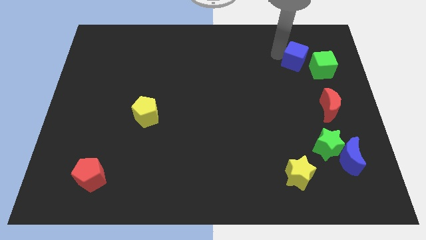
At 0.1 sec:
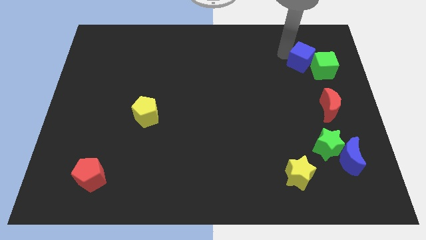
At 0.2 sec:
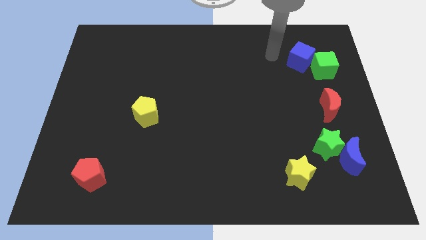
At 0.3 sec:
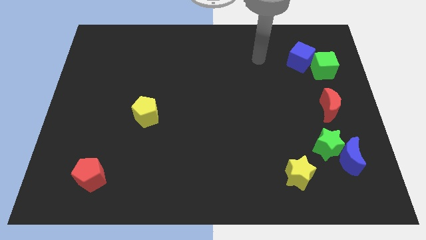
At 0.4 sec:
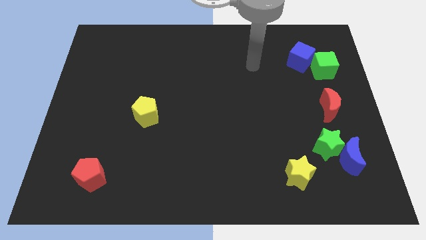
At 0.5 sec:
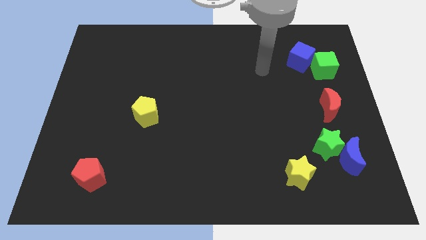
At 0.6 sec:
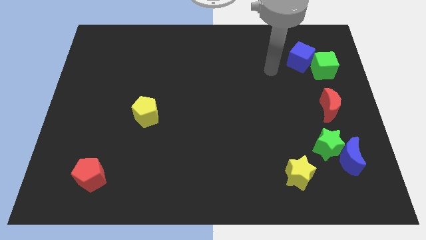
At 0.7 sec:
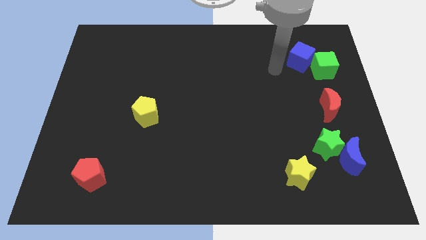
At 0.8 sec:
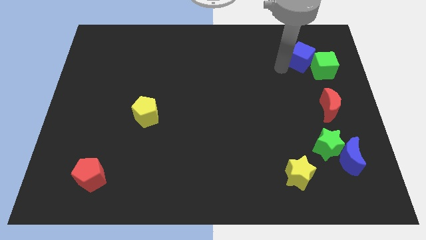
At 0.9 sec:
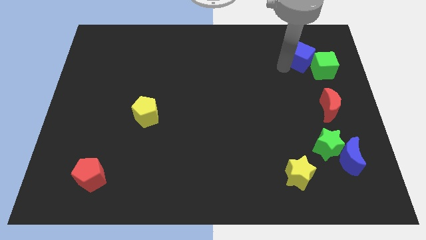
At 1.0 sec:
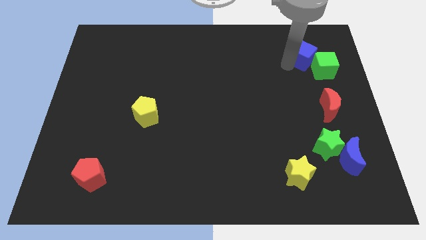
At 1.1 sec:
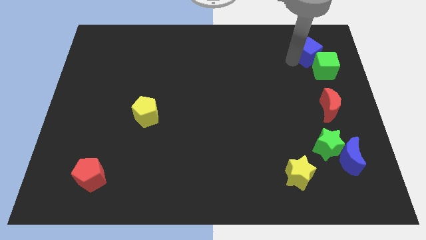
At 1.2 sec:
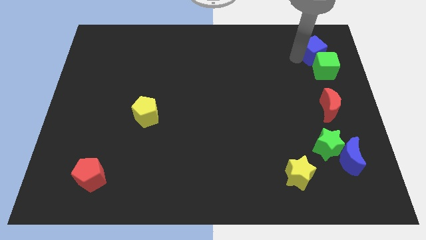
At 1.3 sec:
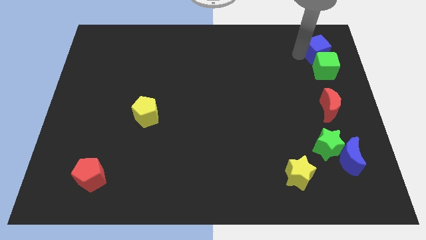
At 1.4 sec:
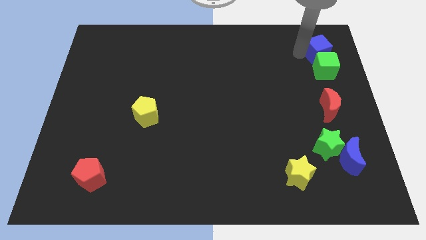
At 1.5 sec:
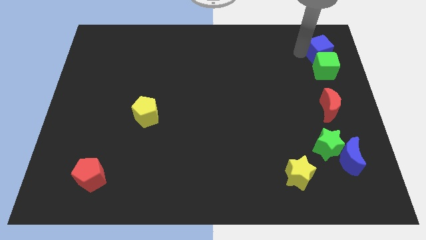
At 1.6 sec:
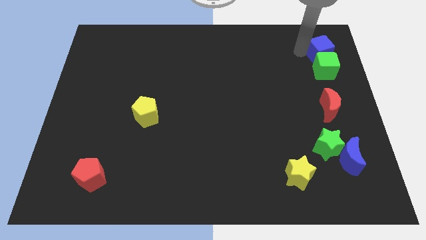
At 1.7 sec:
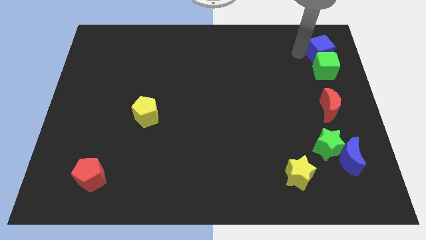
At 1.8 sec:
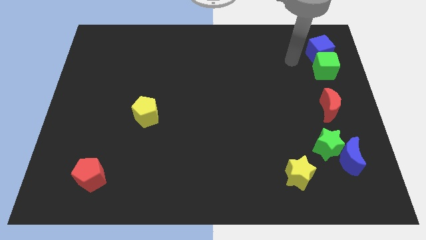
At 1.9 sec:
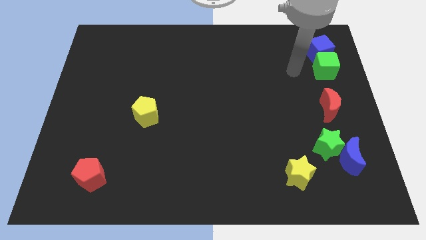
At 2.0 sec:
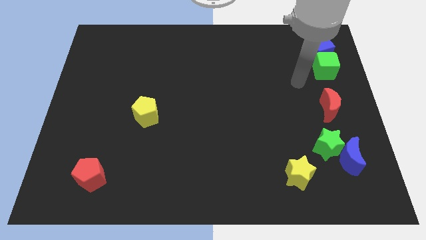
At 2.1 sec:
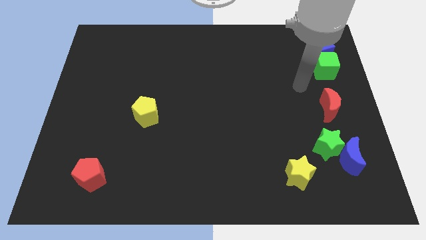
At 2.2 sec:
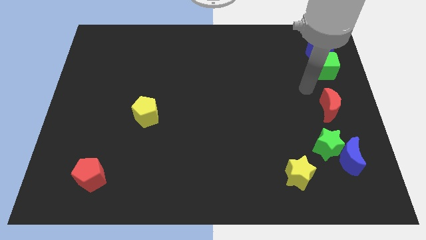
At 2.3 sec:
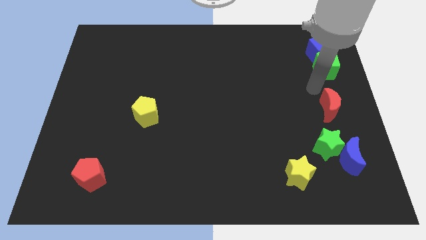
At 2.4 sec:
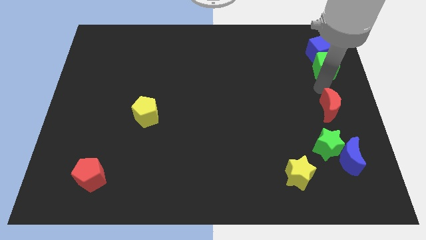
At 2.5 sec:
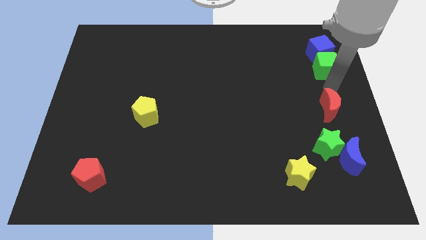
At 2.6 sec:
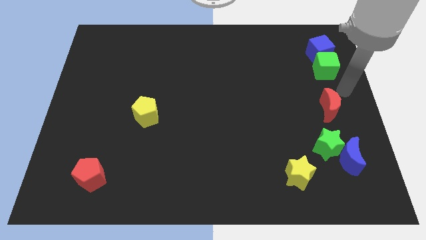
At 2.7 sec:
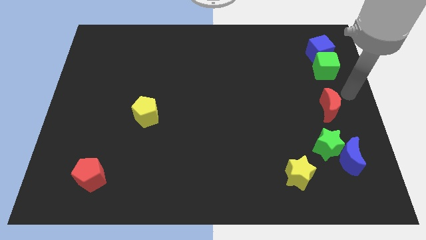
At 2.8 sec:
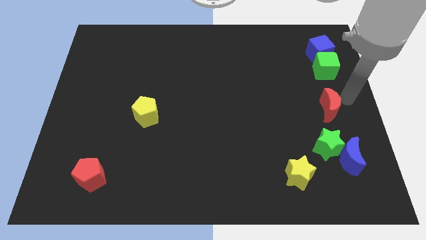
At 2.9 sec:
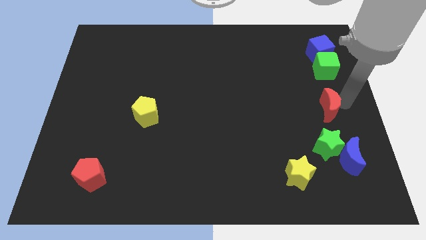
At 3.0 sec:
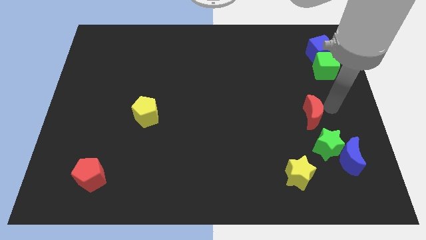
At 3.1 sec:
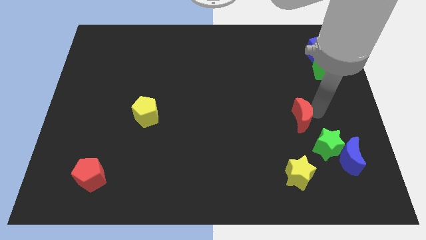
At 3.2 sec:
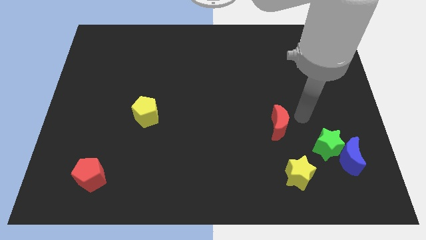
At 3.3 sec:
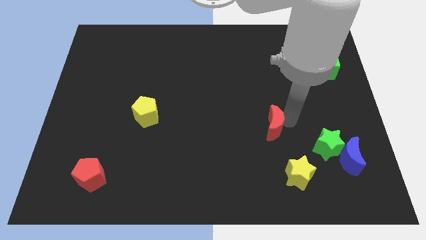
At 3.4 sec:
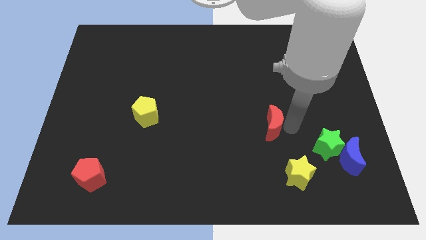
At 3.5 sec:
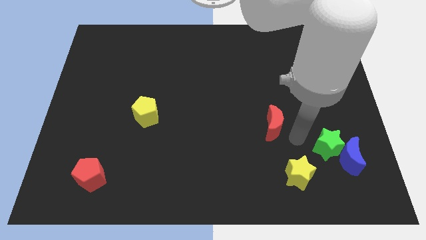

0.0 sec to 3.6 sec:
push the blue cube to the top of the green cube

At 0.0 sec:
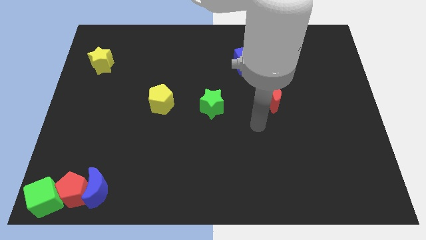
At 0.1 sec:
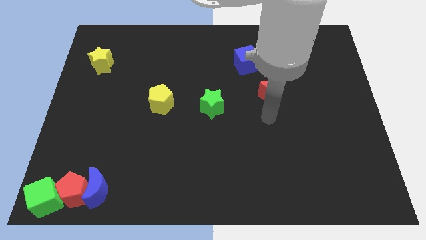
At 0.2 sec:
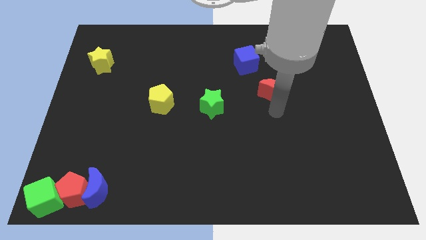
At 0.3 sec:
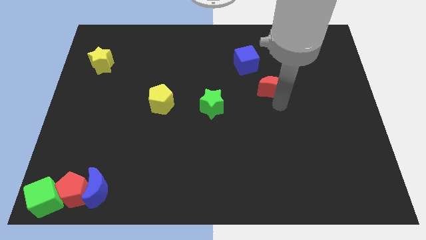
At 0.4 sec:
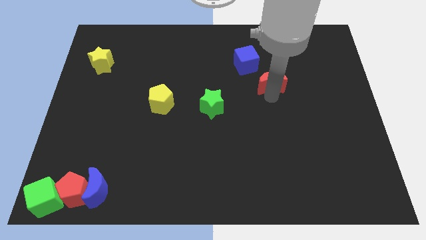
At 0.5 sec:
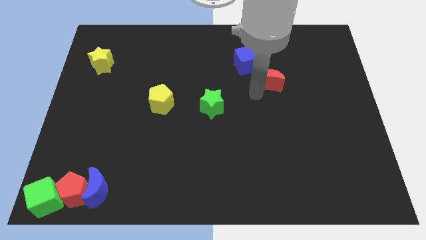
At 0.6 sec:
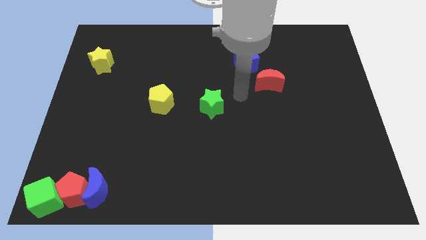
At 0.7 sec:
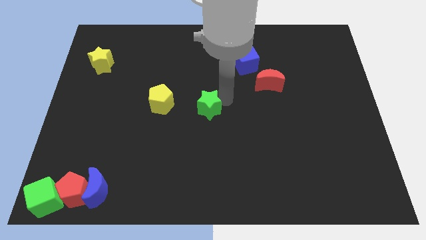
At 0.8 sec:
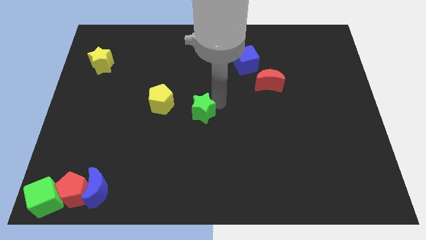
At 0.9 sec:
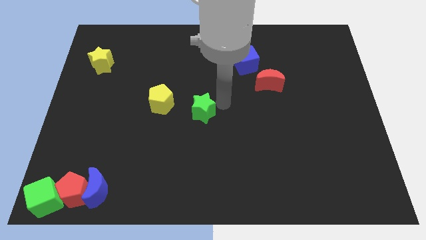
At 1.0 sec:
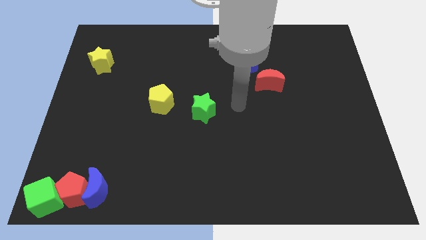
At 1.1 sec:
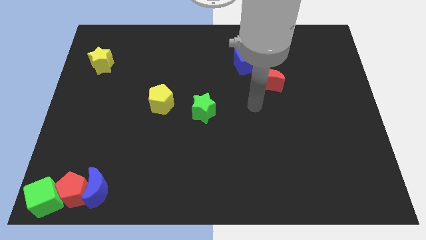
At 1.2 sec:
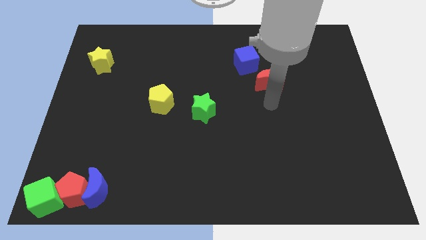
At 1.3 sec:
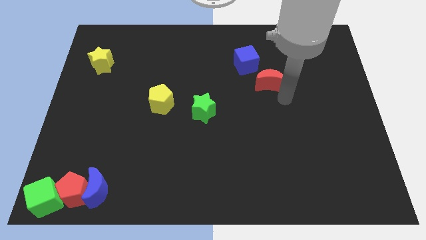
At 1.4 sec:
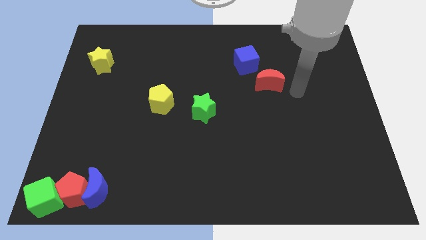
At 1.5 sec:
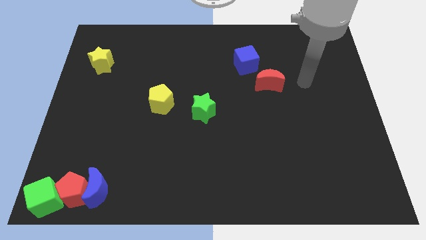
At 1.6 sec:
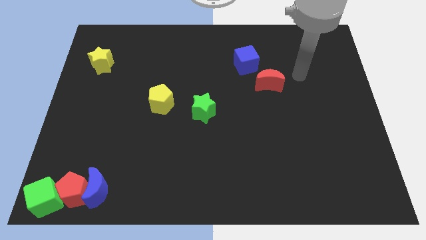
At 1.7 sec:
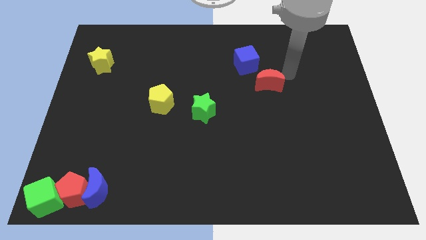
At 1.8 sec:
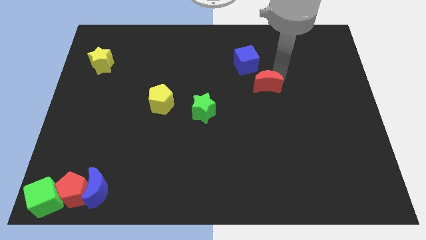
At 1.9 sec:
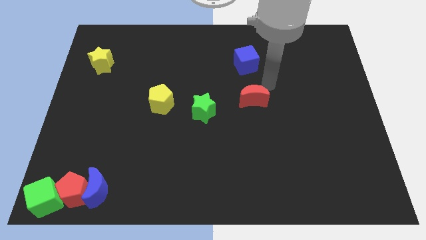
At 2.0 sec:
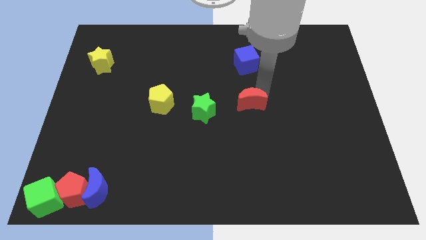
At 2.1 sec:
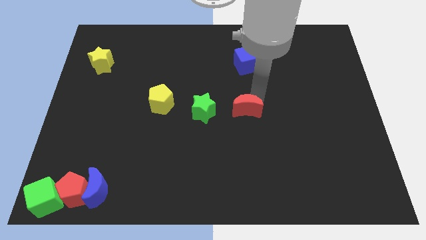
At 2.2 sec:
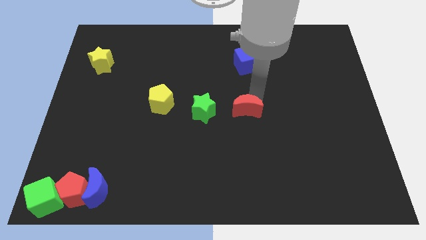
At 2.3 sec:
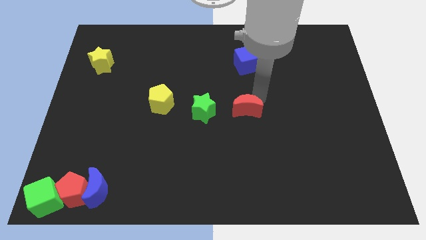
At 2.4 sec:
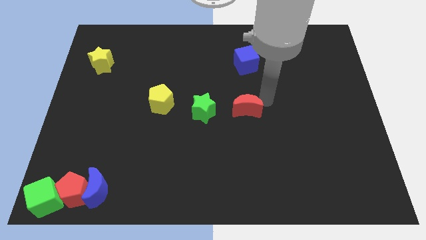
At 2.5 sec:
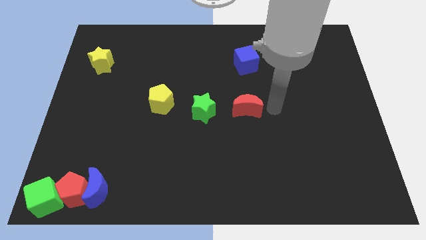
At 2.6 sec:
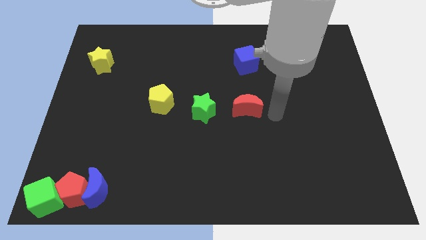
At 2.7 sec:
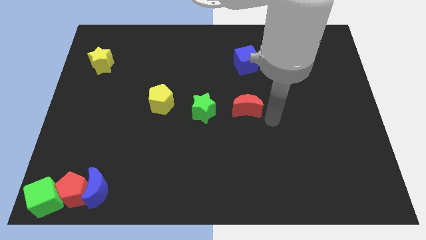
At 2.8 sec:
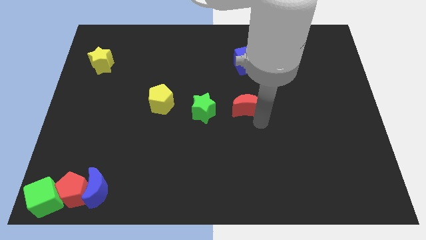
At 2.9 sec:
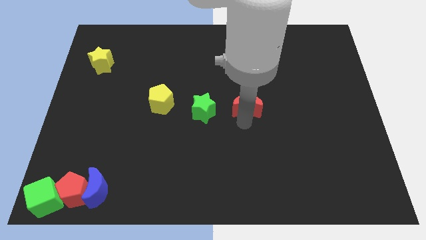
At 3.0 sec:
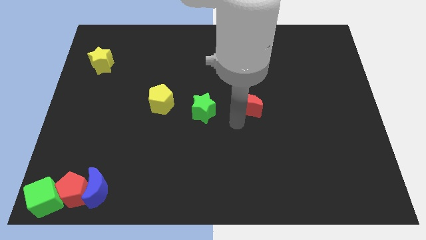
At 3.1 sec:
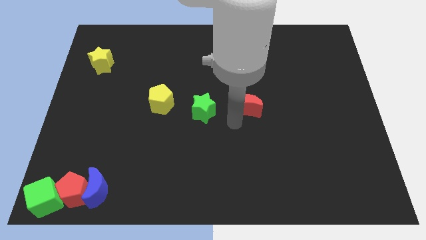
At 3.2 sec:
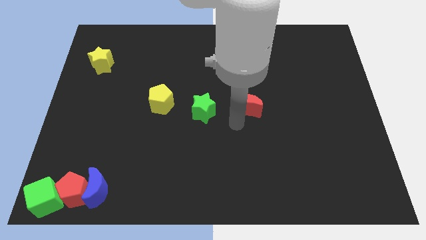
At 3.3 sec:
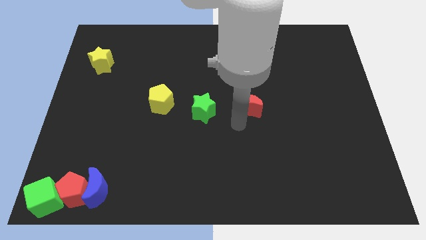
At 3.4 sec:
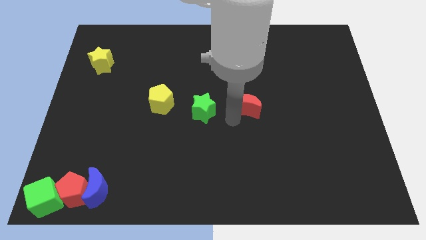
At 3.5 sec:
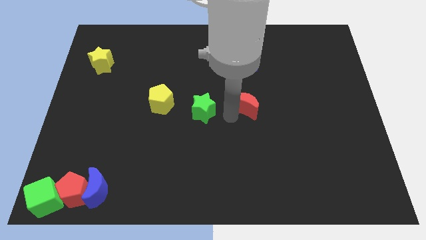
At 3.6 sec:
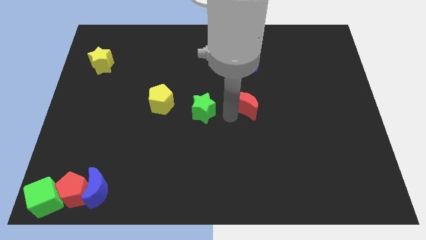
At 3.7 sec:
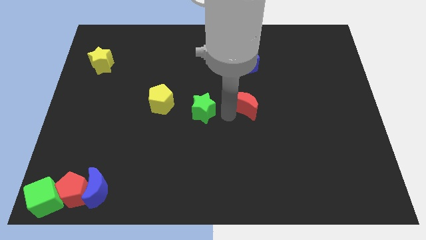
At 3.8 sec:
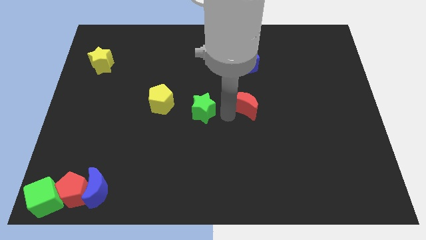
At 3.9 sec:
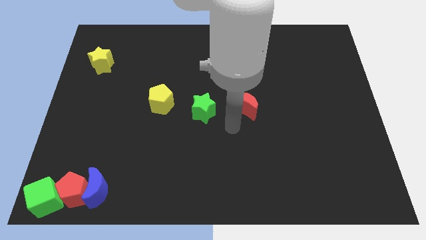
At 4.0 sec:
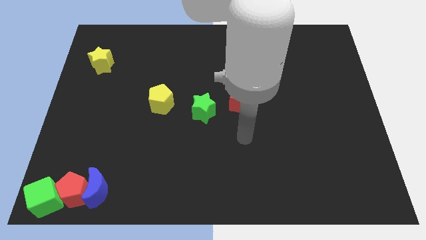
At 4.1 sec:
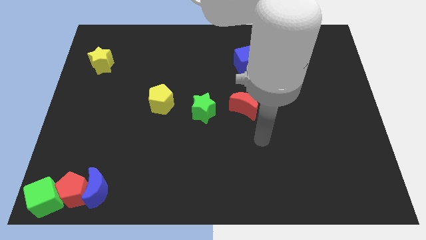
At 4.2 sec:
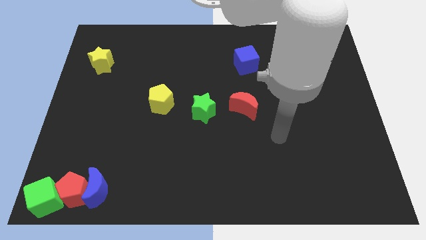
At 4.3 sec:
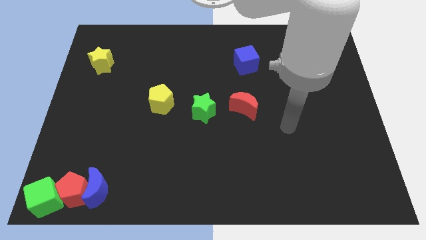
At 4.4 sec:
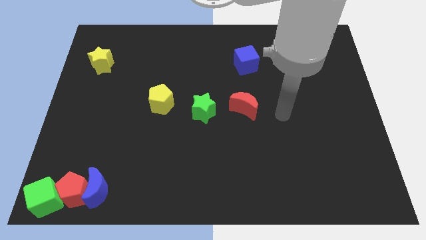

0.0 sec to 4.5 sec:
place the green star and red crescent at the center of the board

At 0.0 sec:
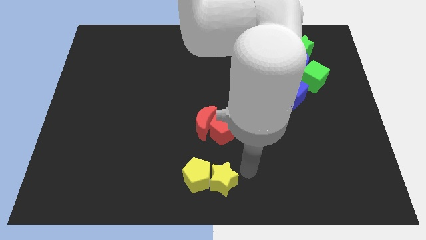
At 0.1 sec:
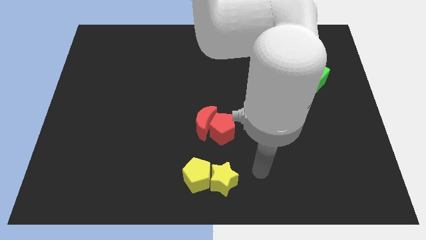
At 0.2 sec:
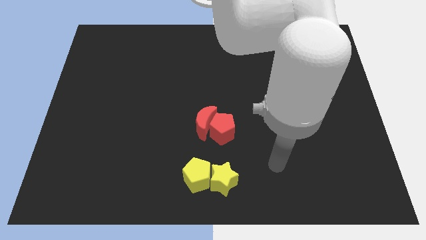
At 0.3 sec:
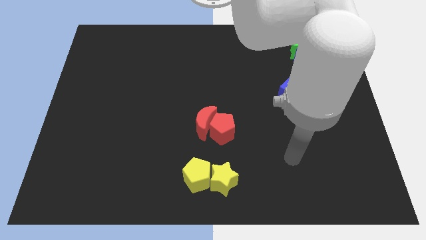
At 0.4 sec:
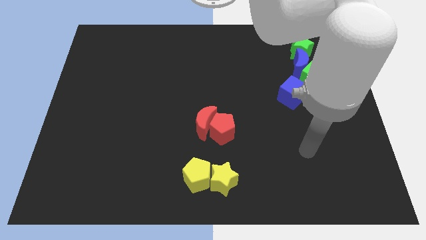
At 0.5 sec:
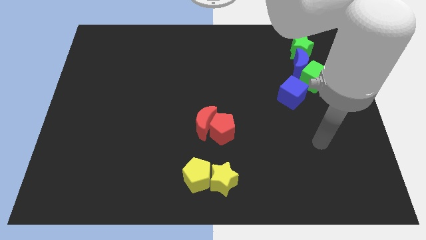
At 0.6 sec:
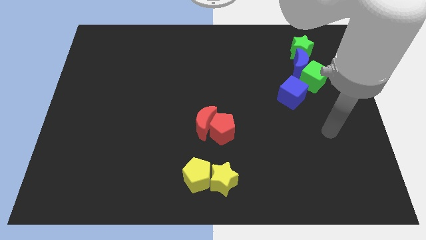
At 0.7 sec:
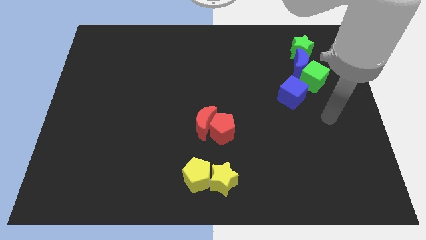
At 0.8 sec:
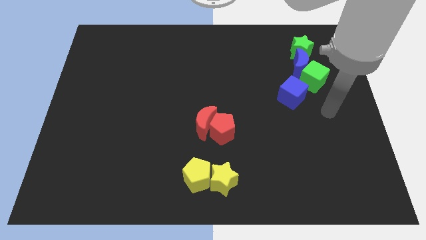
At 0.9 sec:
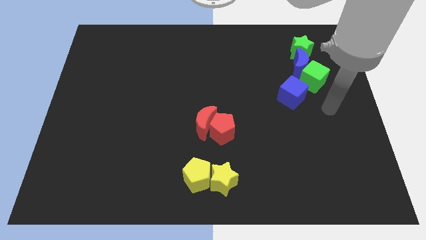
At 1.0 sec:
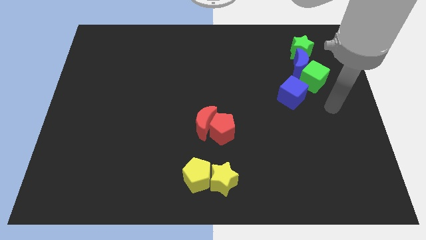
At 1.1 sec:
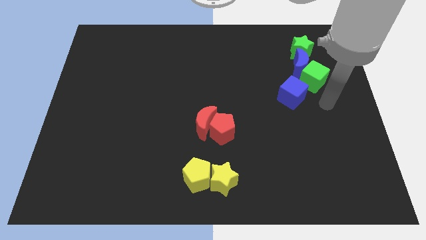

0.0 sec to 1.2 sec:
move your arm away from the yellow star
